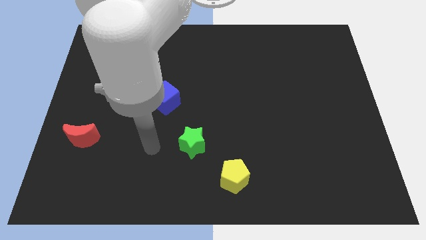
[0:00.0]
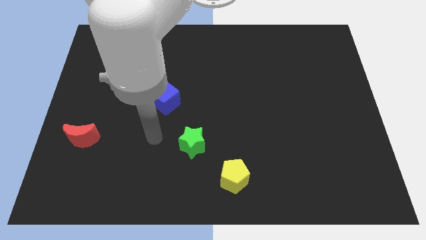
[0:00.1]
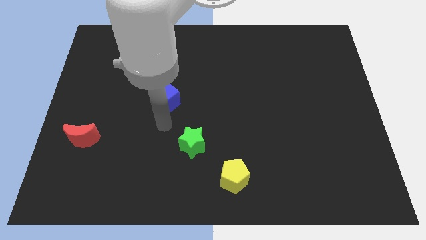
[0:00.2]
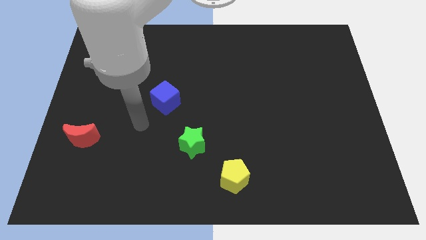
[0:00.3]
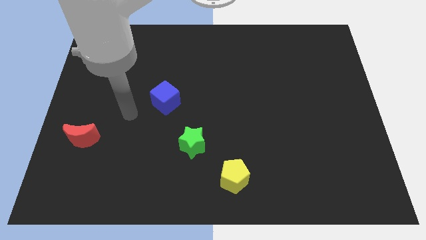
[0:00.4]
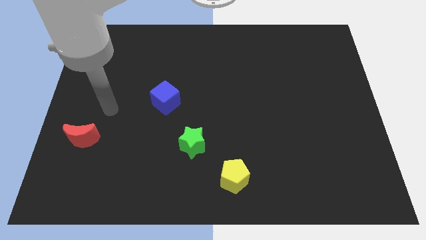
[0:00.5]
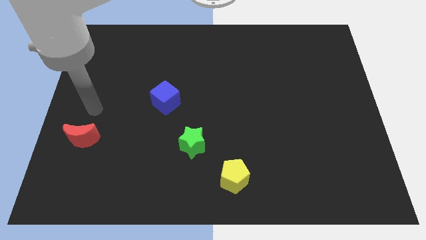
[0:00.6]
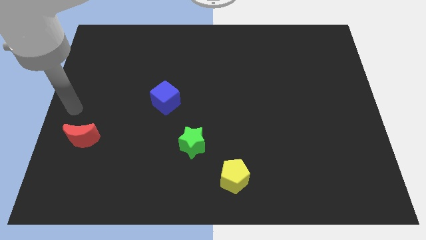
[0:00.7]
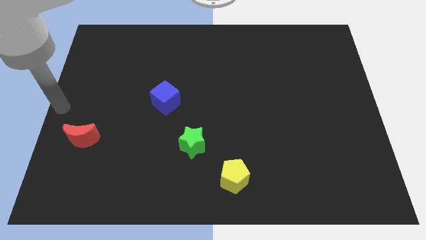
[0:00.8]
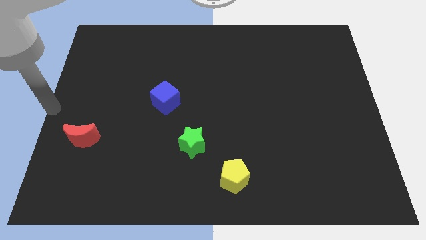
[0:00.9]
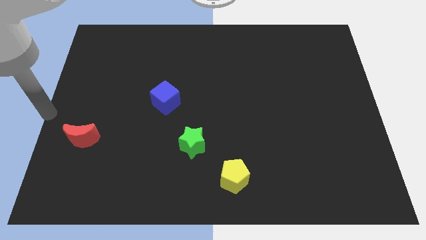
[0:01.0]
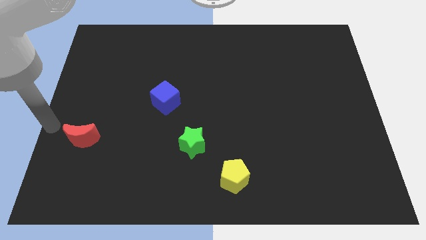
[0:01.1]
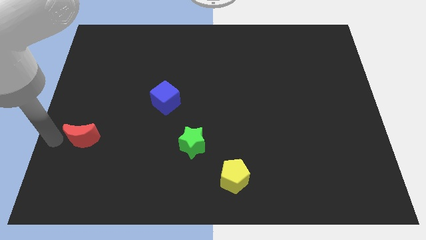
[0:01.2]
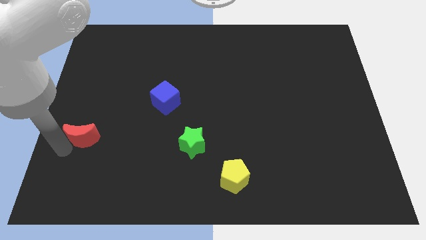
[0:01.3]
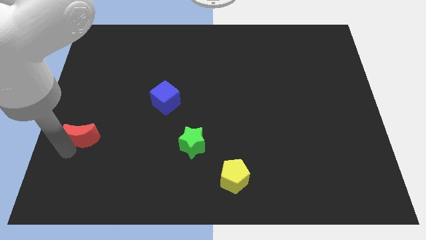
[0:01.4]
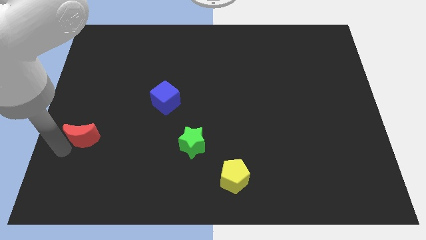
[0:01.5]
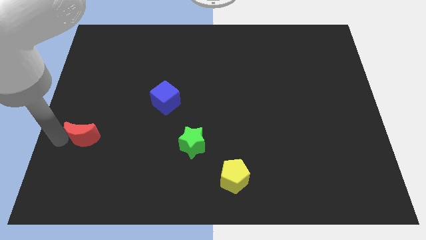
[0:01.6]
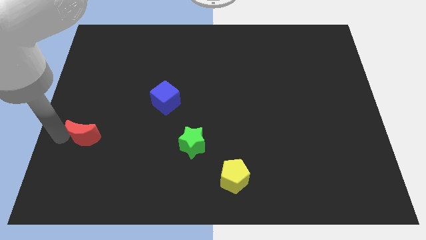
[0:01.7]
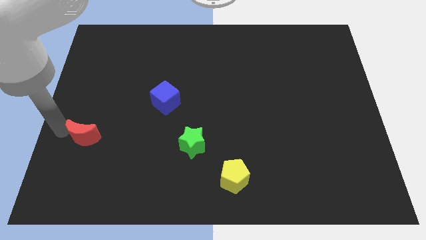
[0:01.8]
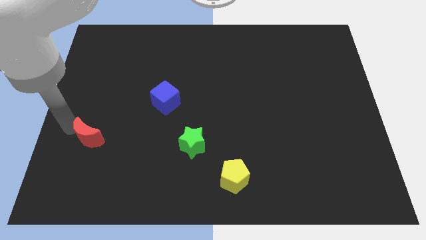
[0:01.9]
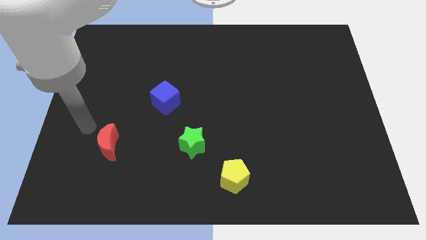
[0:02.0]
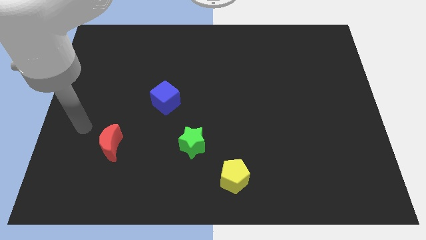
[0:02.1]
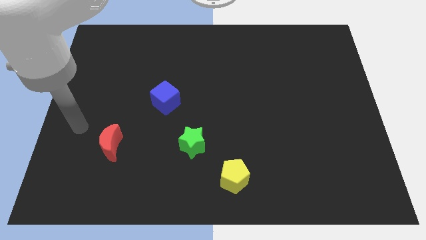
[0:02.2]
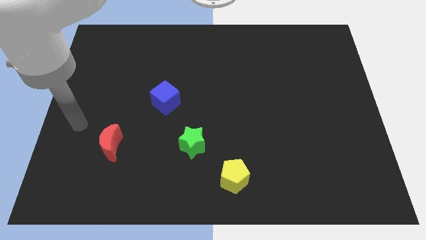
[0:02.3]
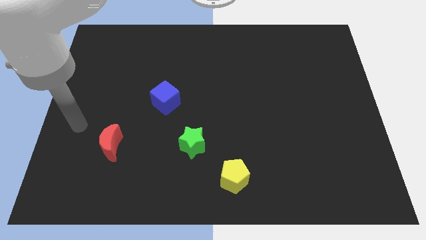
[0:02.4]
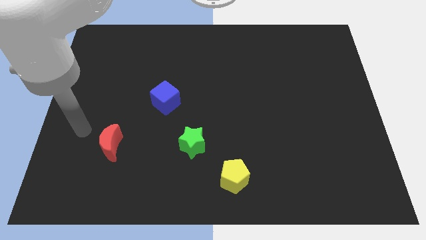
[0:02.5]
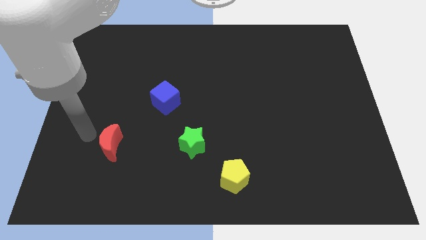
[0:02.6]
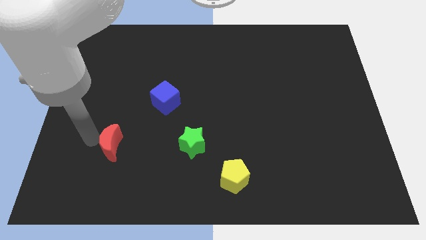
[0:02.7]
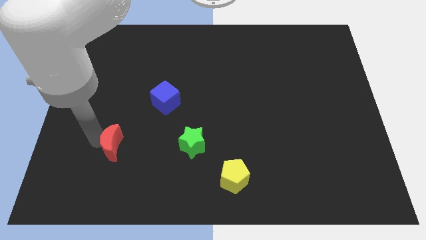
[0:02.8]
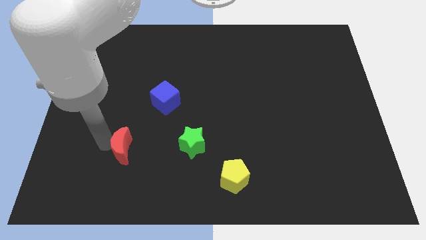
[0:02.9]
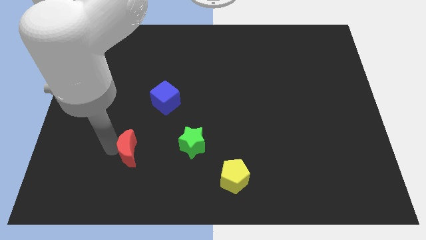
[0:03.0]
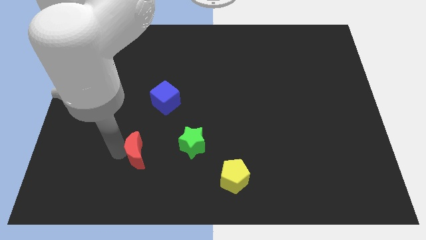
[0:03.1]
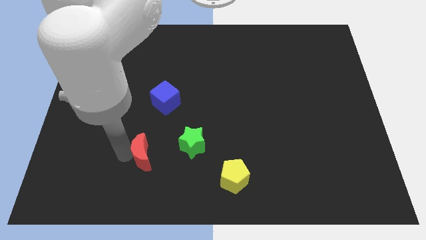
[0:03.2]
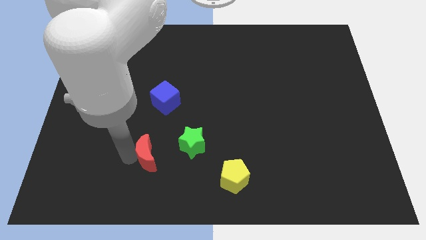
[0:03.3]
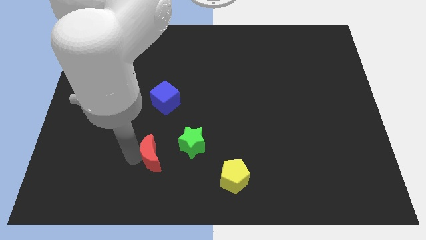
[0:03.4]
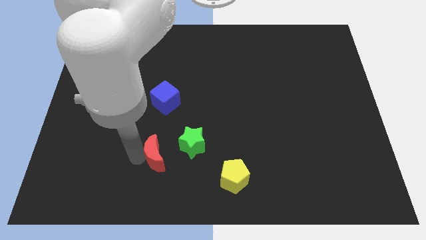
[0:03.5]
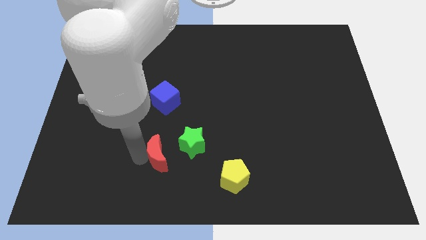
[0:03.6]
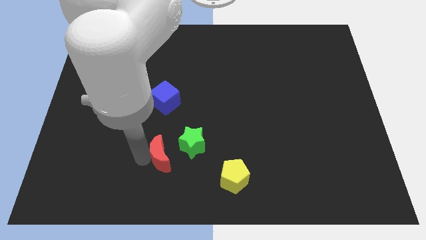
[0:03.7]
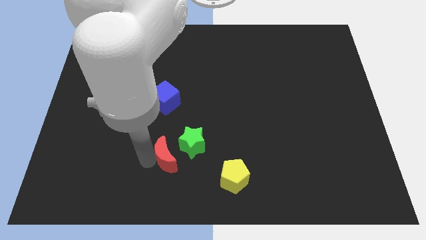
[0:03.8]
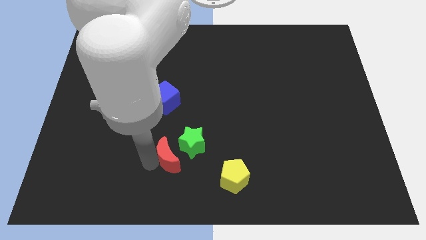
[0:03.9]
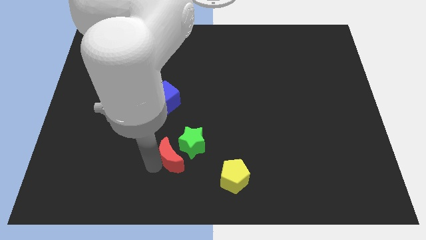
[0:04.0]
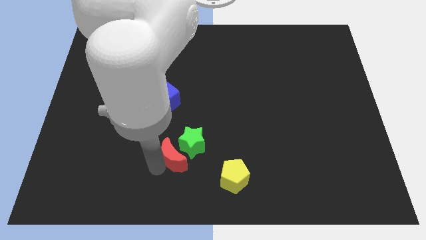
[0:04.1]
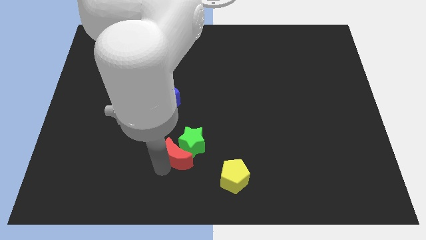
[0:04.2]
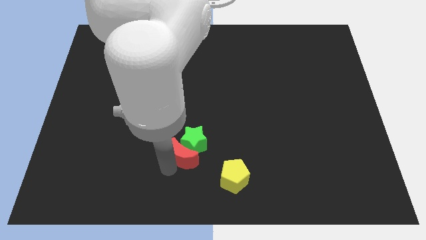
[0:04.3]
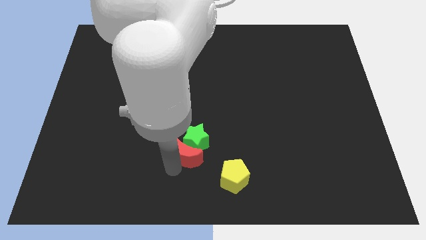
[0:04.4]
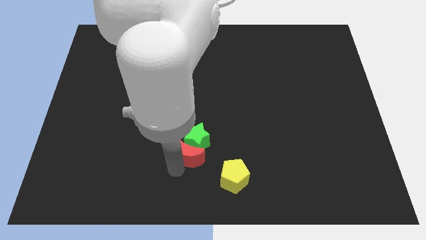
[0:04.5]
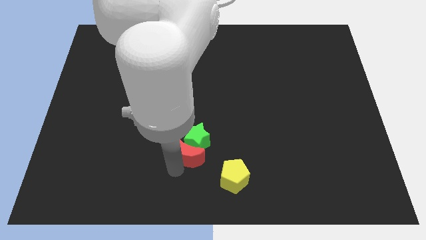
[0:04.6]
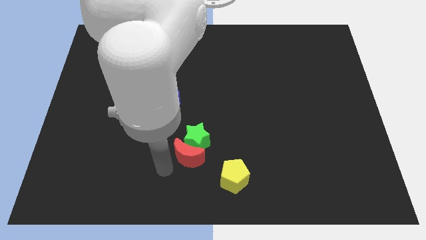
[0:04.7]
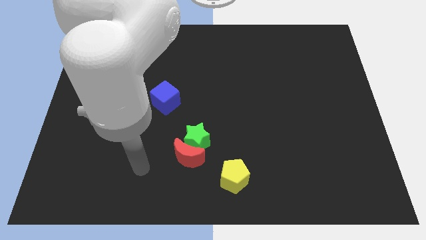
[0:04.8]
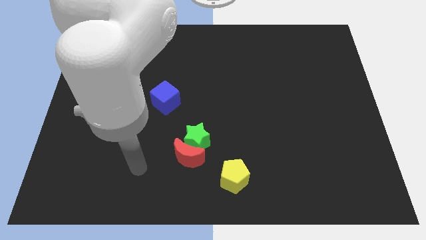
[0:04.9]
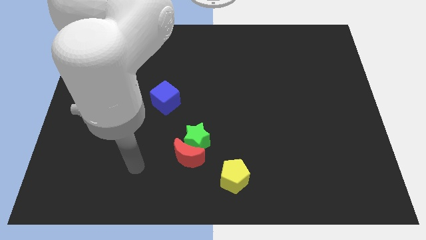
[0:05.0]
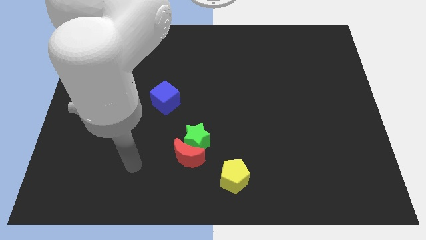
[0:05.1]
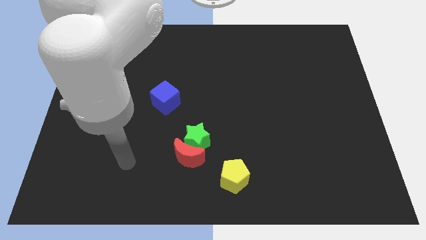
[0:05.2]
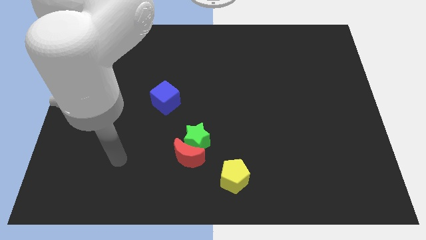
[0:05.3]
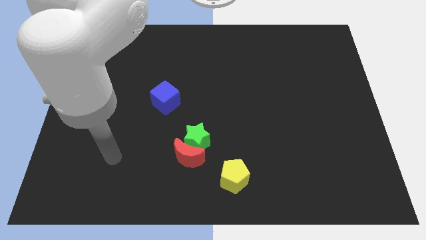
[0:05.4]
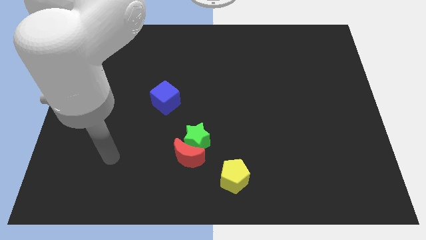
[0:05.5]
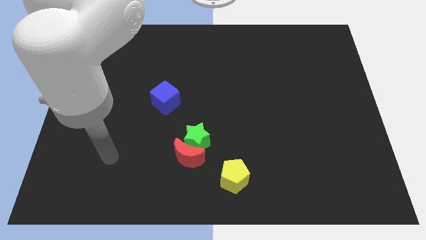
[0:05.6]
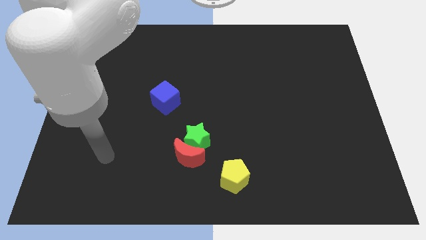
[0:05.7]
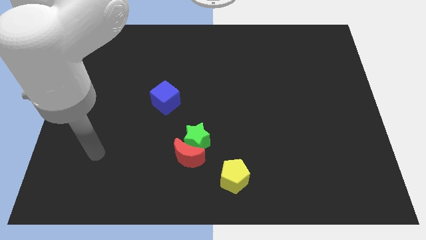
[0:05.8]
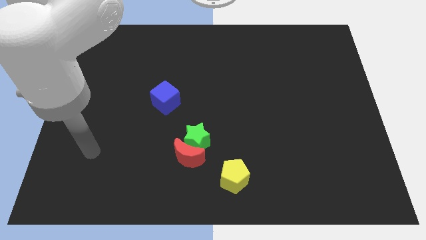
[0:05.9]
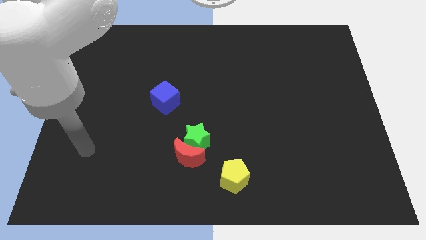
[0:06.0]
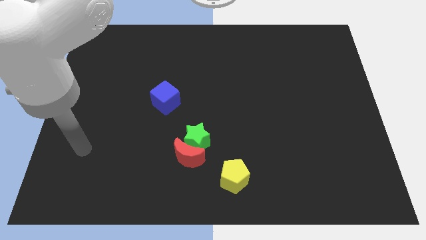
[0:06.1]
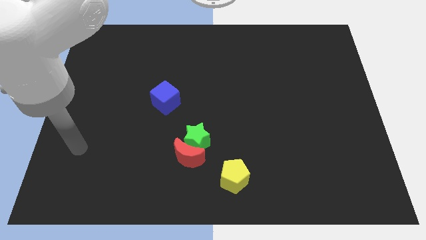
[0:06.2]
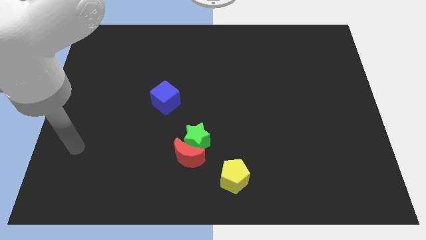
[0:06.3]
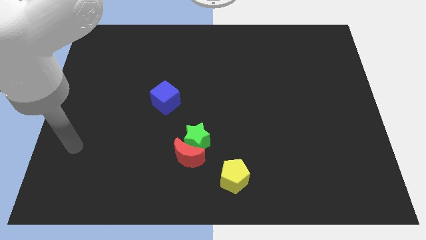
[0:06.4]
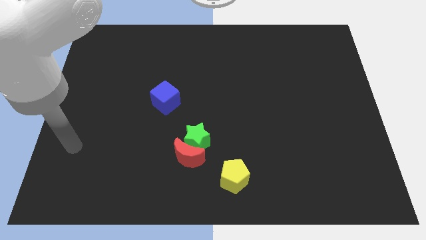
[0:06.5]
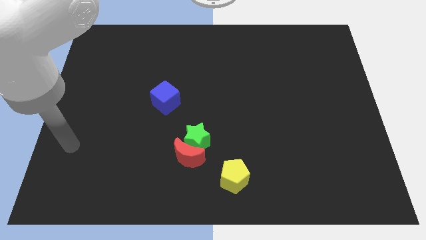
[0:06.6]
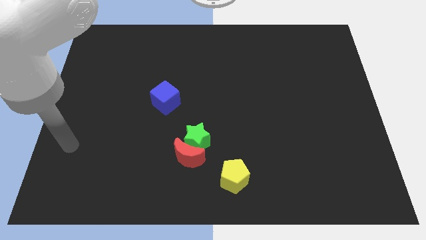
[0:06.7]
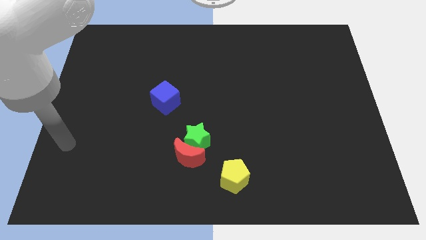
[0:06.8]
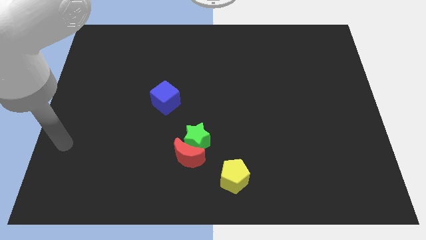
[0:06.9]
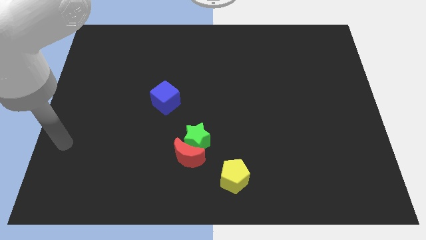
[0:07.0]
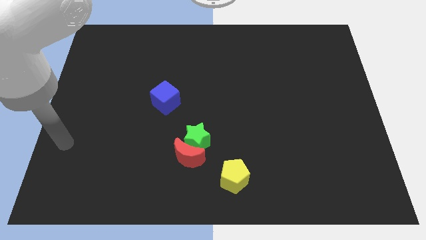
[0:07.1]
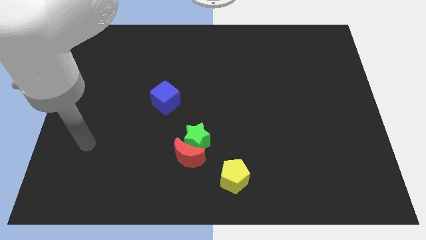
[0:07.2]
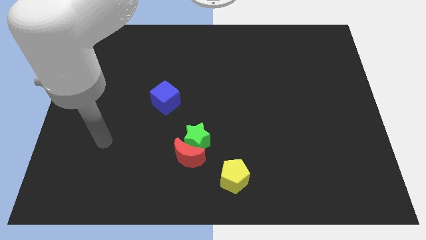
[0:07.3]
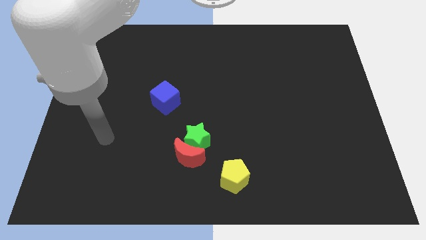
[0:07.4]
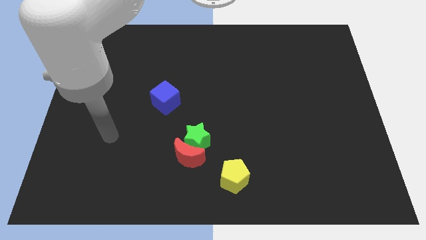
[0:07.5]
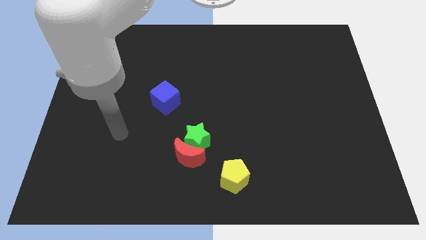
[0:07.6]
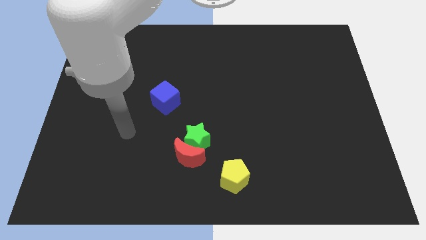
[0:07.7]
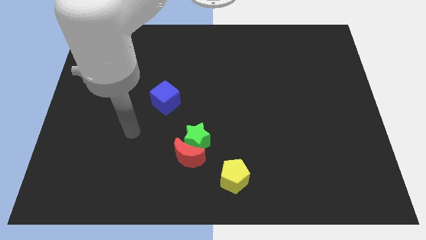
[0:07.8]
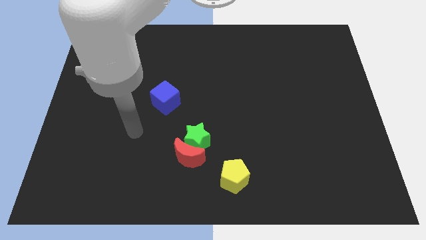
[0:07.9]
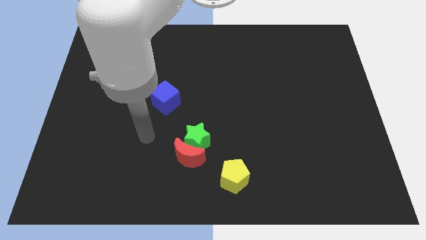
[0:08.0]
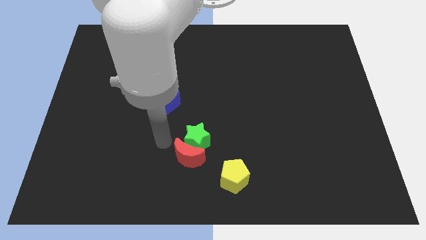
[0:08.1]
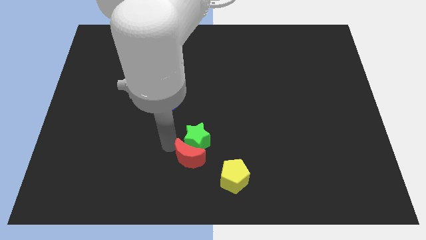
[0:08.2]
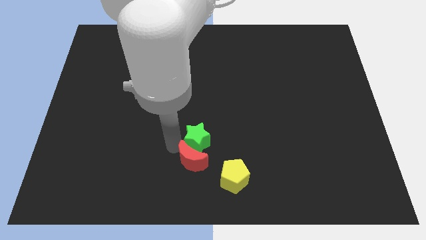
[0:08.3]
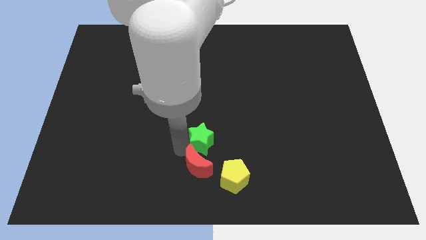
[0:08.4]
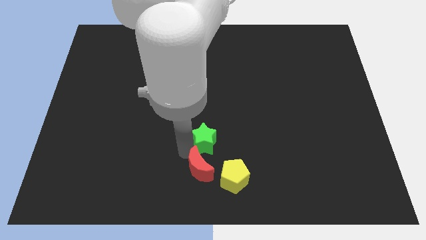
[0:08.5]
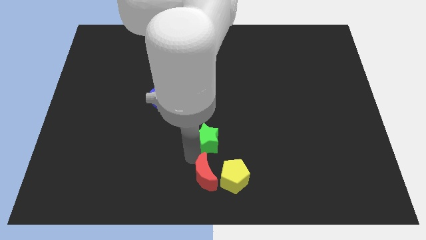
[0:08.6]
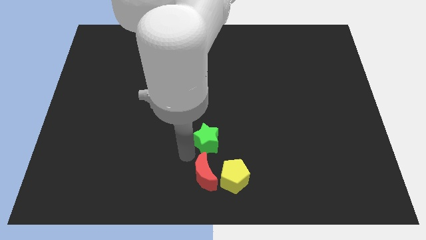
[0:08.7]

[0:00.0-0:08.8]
put the red moon next to the yellow pentagon
